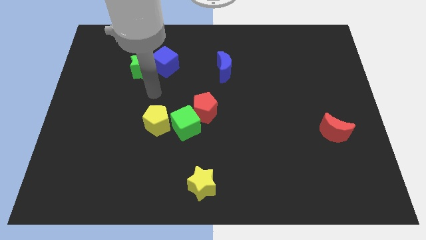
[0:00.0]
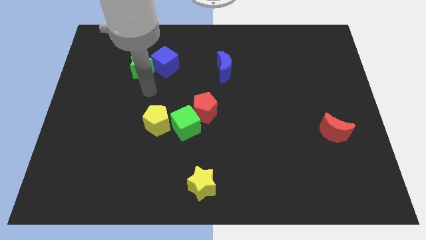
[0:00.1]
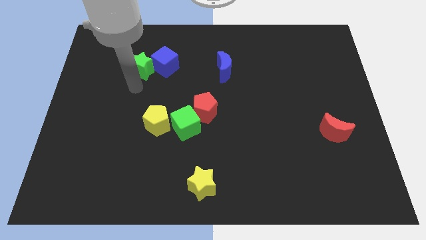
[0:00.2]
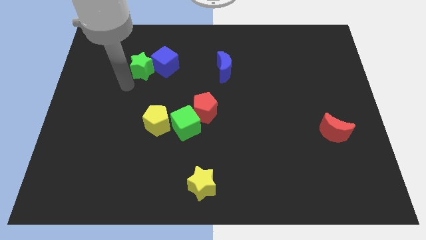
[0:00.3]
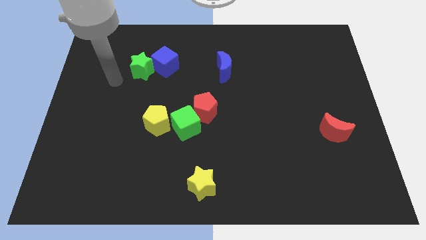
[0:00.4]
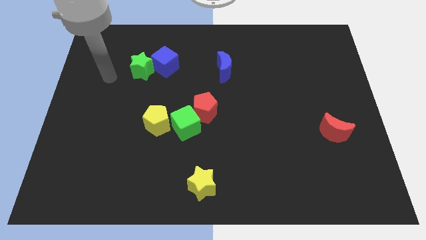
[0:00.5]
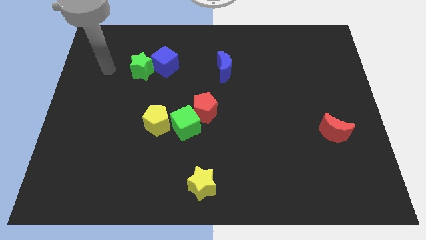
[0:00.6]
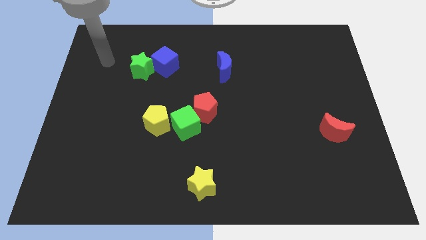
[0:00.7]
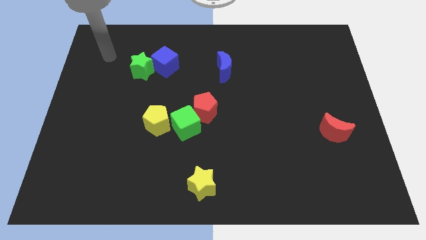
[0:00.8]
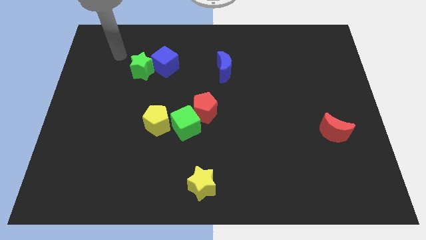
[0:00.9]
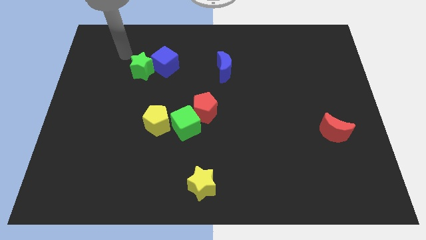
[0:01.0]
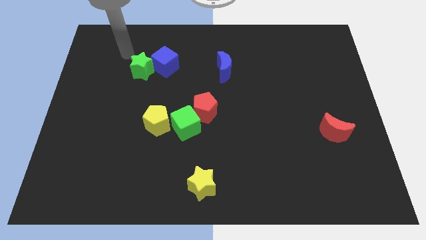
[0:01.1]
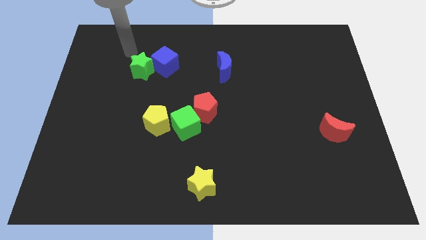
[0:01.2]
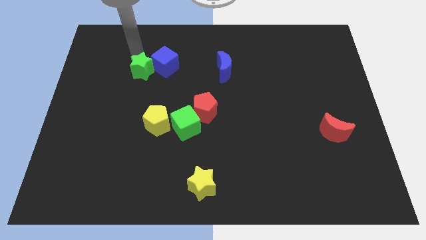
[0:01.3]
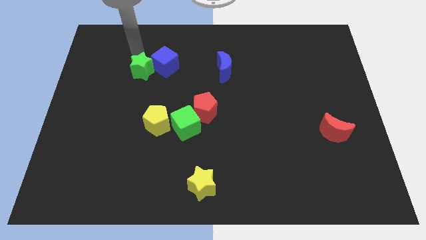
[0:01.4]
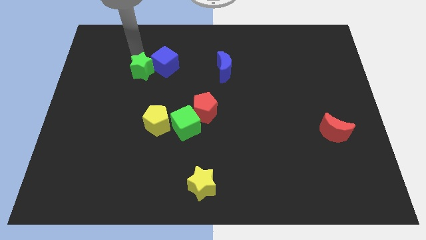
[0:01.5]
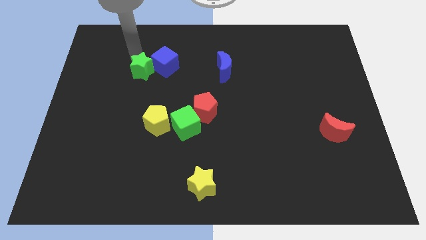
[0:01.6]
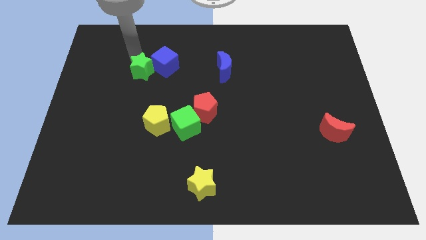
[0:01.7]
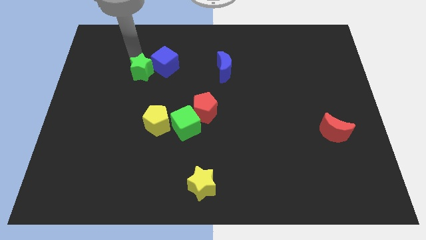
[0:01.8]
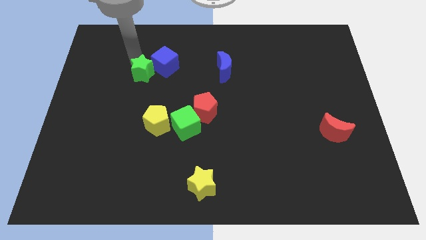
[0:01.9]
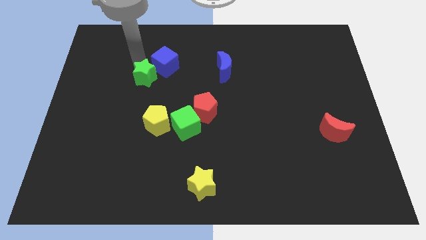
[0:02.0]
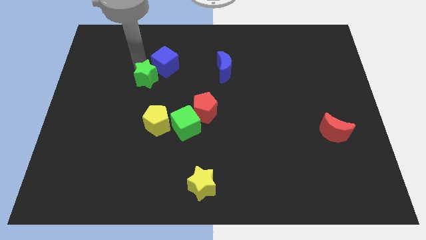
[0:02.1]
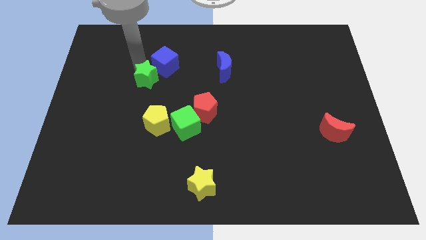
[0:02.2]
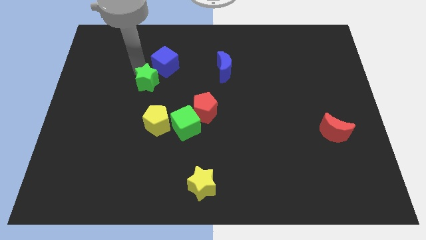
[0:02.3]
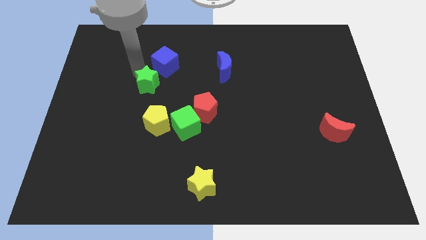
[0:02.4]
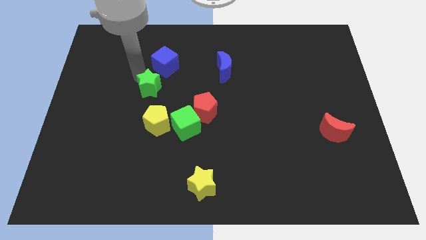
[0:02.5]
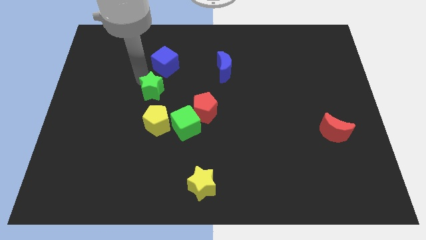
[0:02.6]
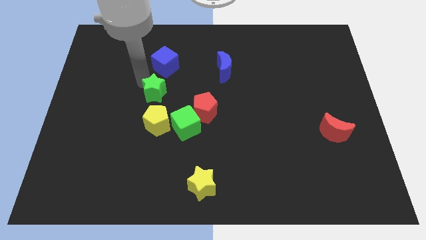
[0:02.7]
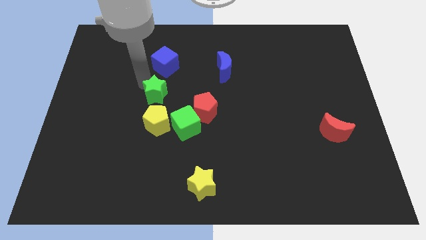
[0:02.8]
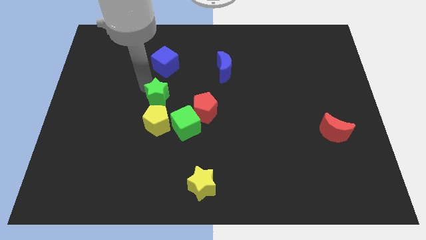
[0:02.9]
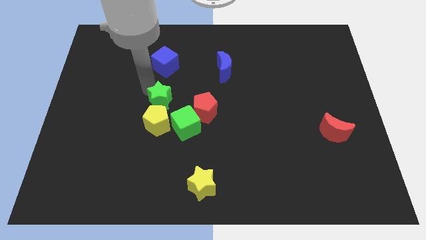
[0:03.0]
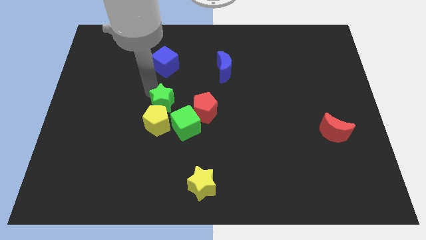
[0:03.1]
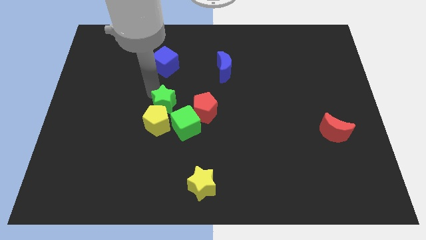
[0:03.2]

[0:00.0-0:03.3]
separate green star from blue cube

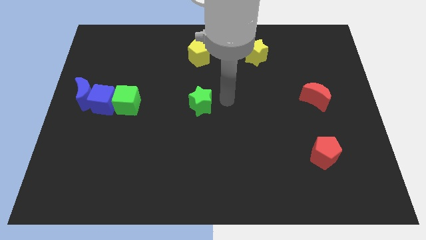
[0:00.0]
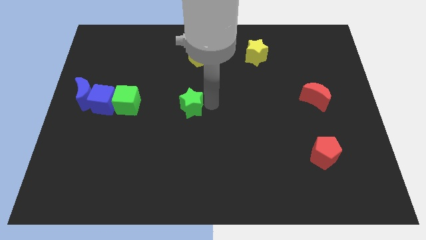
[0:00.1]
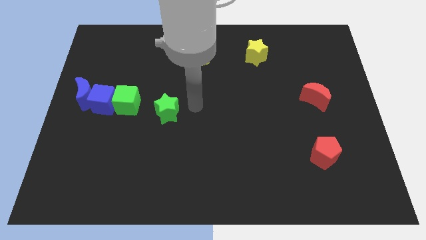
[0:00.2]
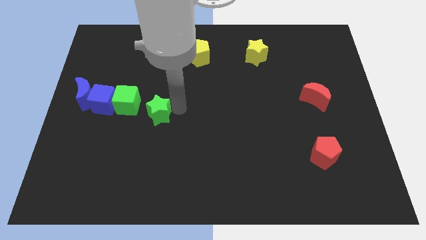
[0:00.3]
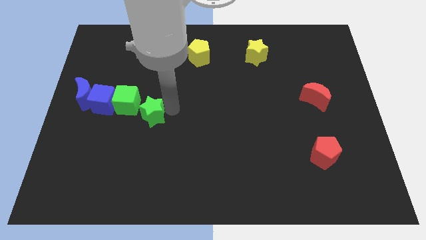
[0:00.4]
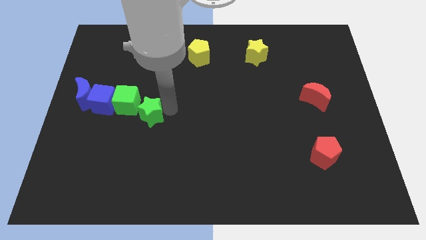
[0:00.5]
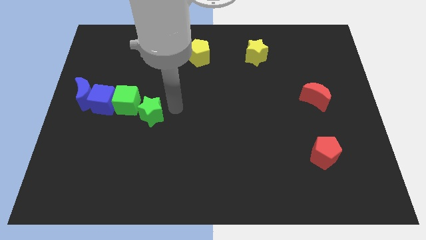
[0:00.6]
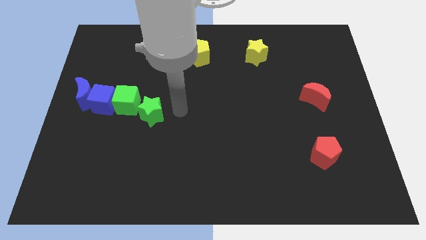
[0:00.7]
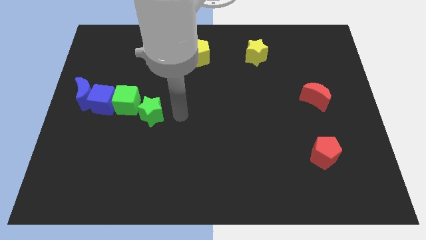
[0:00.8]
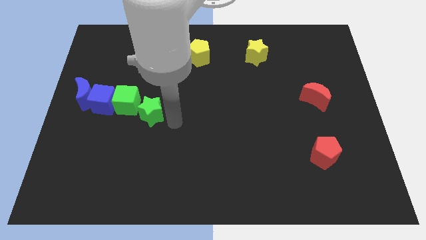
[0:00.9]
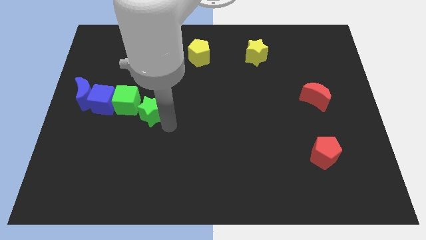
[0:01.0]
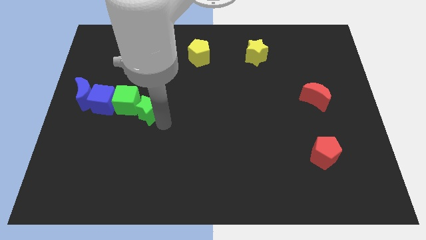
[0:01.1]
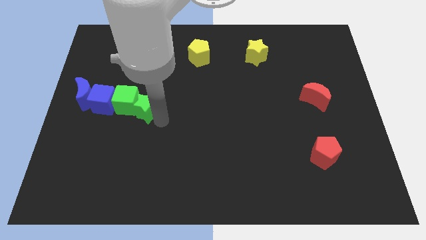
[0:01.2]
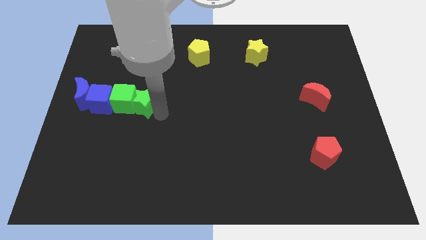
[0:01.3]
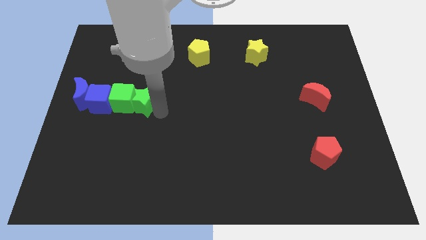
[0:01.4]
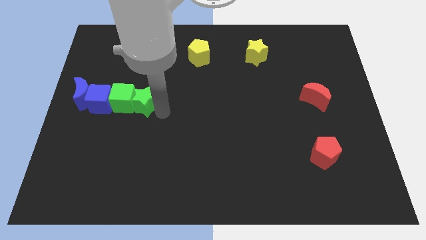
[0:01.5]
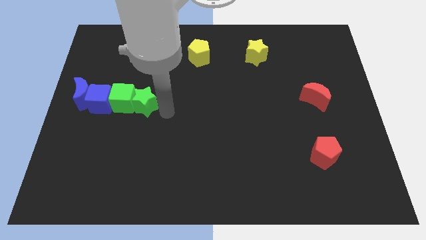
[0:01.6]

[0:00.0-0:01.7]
push the green star into the green cube

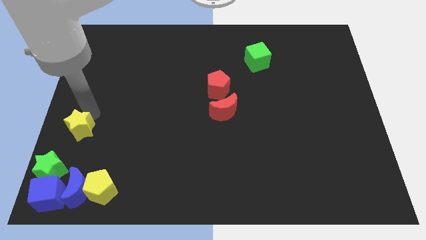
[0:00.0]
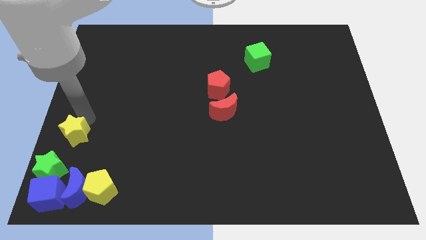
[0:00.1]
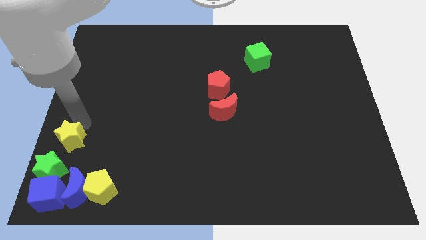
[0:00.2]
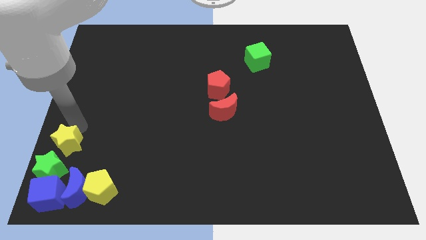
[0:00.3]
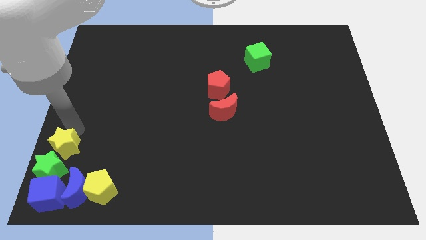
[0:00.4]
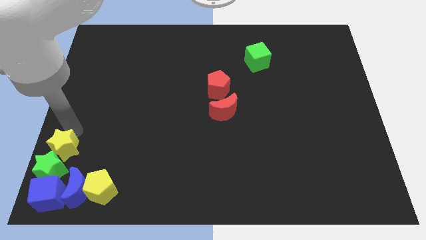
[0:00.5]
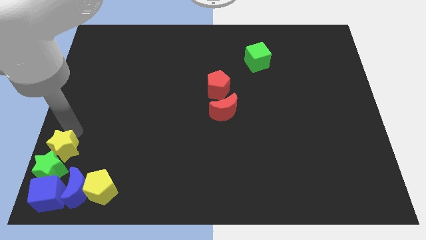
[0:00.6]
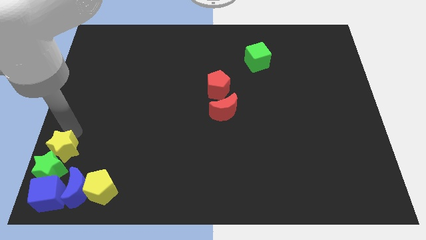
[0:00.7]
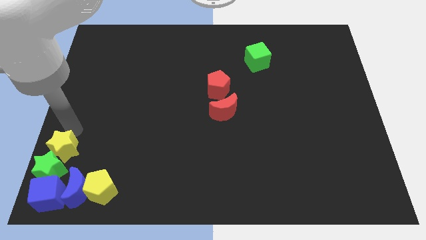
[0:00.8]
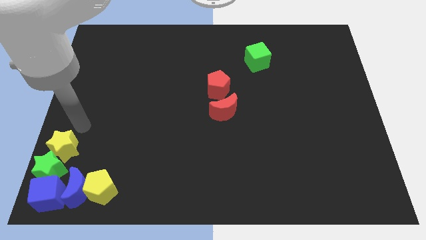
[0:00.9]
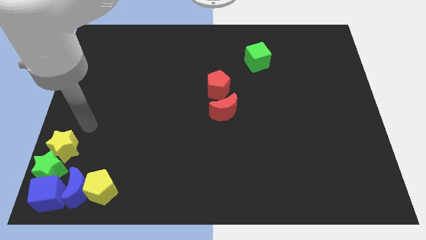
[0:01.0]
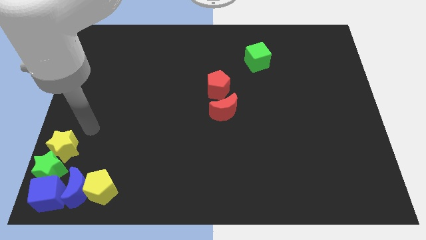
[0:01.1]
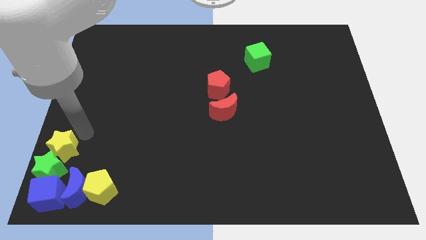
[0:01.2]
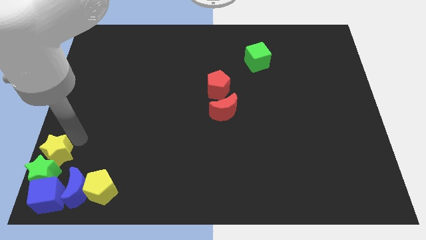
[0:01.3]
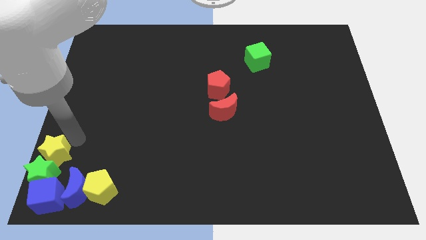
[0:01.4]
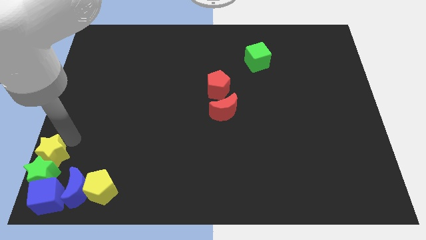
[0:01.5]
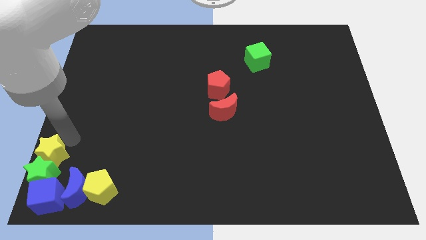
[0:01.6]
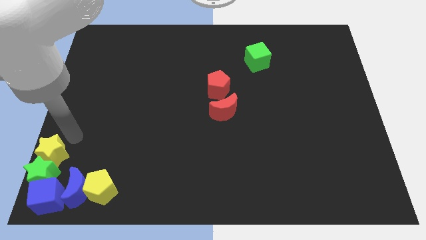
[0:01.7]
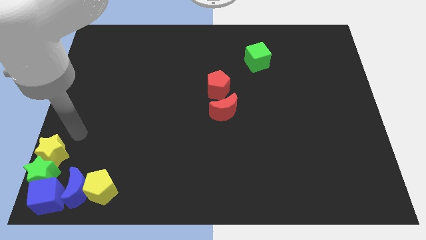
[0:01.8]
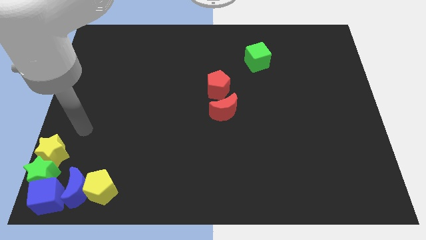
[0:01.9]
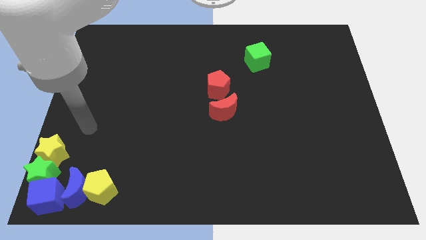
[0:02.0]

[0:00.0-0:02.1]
place yellow star above green star

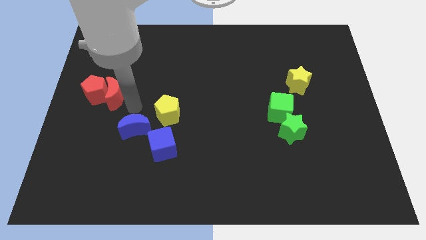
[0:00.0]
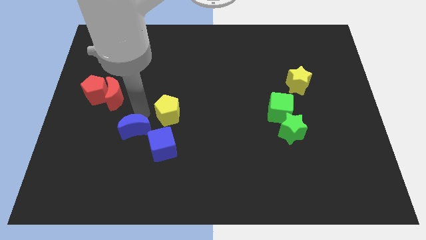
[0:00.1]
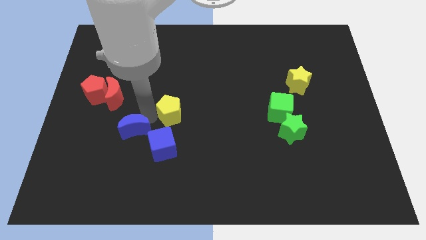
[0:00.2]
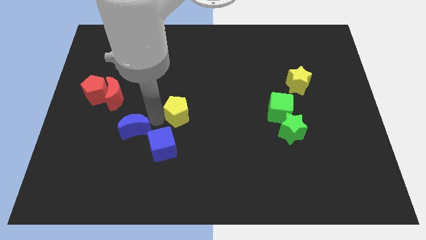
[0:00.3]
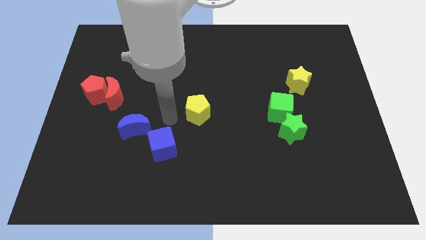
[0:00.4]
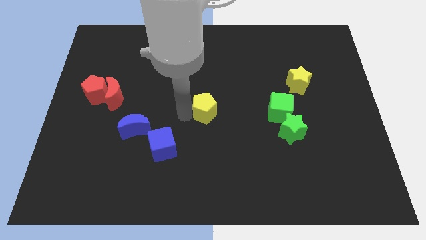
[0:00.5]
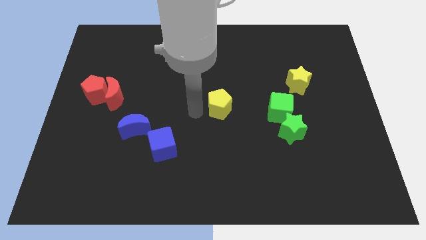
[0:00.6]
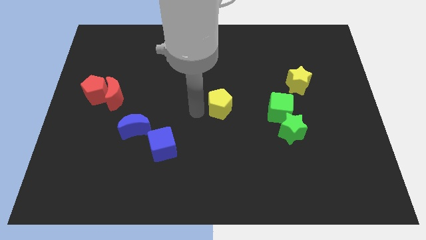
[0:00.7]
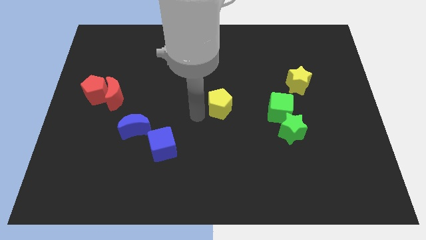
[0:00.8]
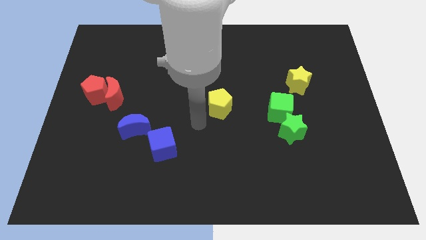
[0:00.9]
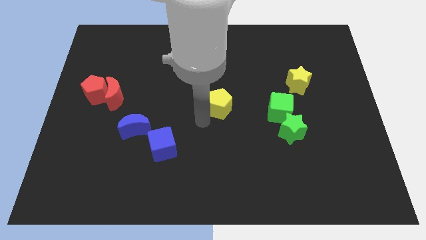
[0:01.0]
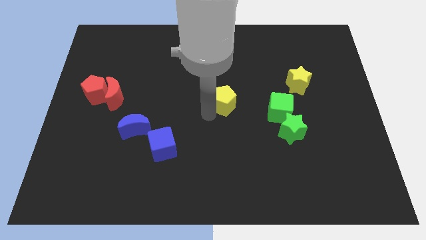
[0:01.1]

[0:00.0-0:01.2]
move the yellow pentagon to the center of the board

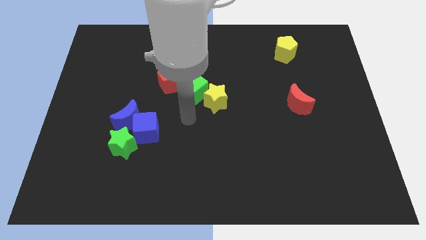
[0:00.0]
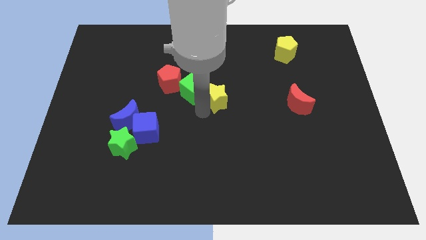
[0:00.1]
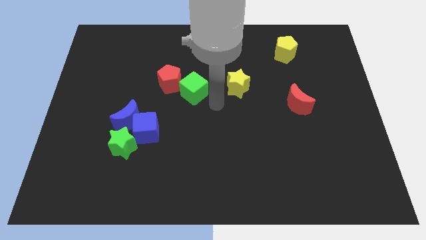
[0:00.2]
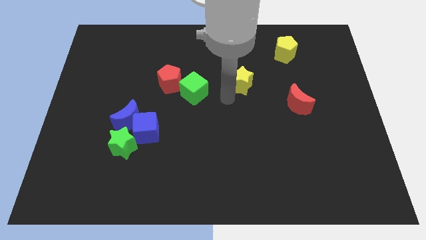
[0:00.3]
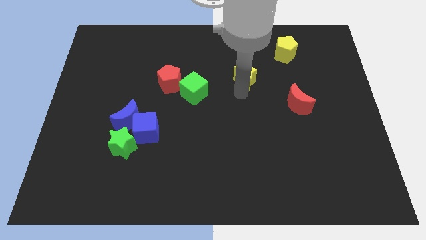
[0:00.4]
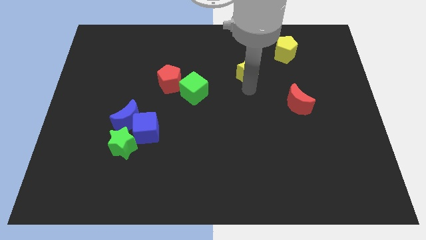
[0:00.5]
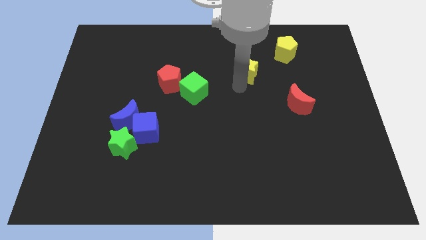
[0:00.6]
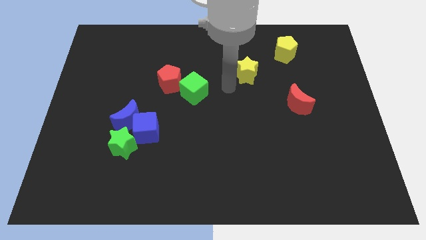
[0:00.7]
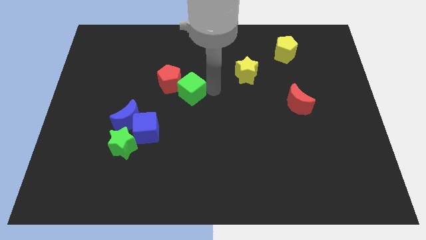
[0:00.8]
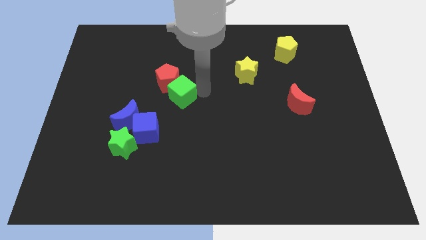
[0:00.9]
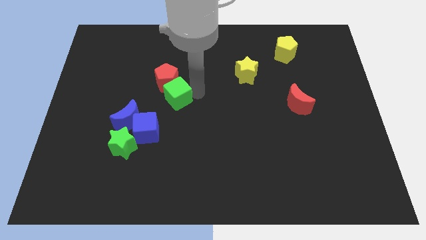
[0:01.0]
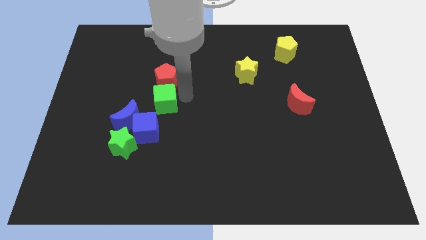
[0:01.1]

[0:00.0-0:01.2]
separate yellow star and the green cube
